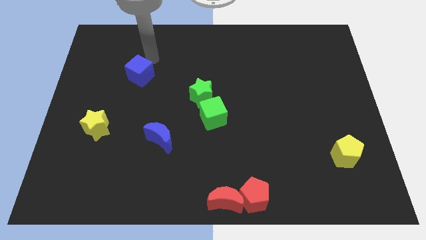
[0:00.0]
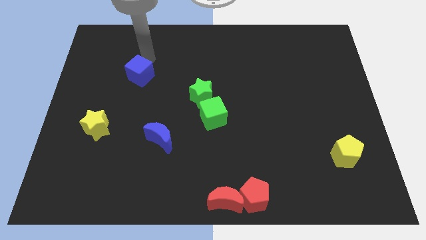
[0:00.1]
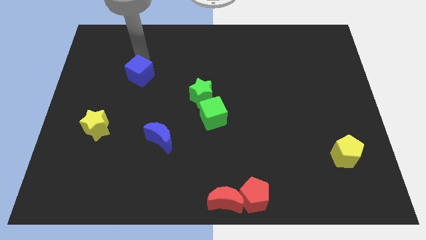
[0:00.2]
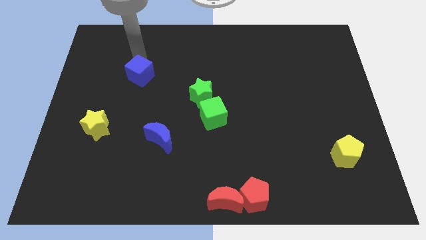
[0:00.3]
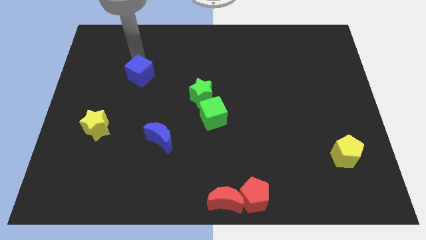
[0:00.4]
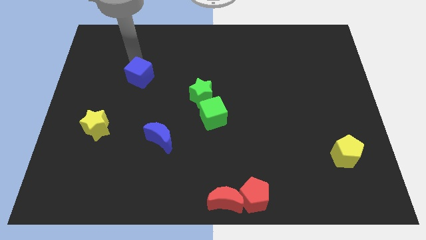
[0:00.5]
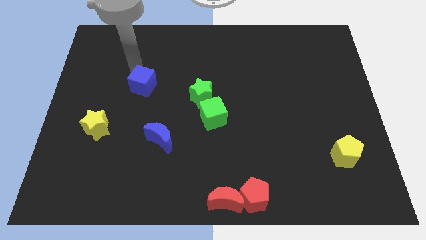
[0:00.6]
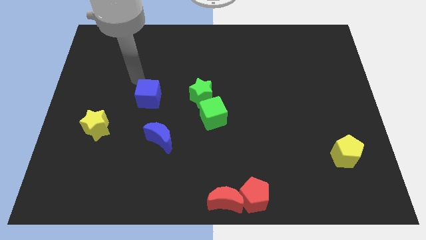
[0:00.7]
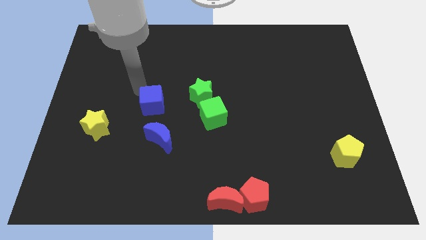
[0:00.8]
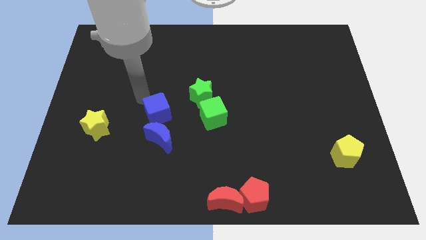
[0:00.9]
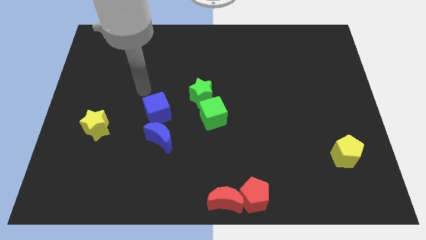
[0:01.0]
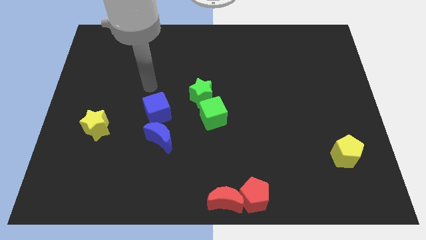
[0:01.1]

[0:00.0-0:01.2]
push the blue cube towards the left side of the green cube

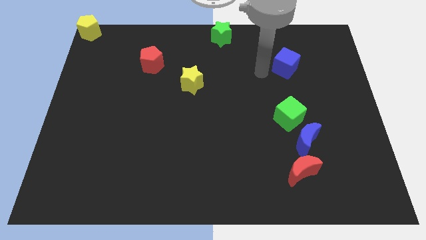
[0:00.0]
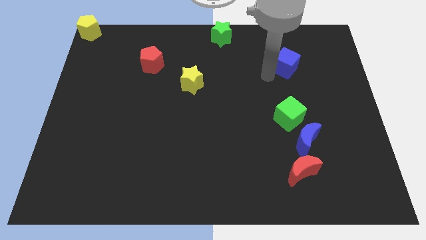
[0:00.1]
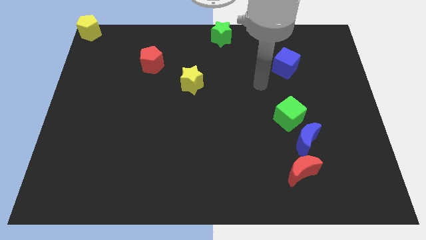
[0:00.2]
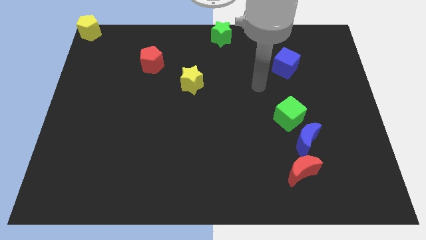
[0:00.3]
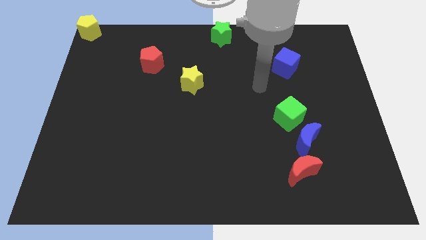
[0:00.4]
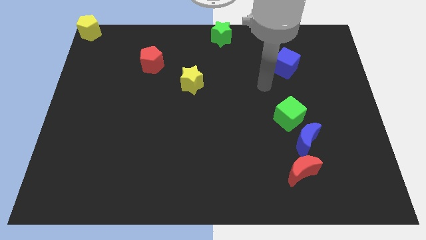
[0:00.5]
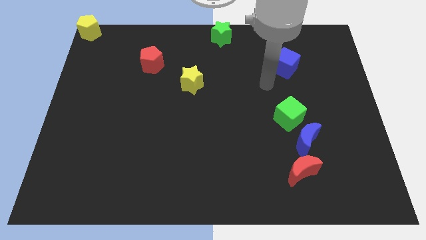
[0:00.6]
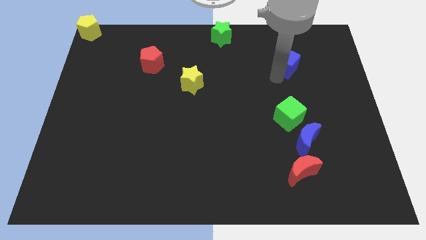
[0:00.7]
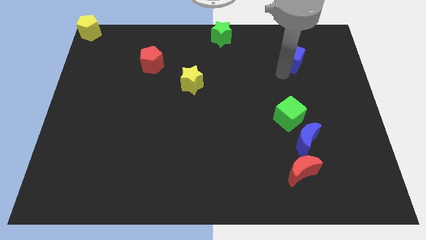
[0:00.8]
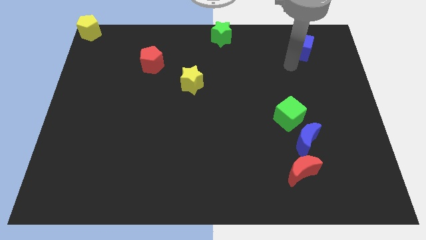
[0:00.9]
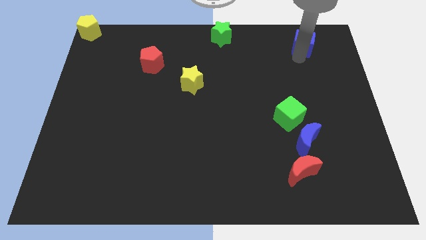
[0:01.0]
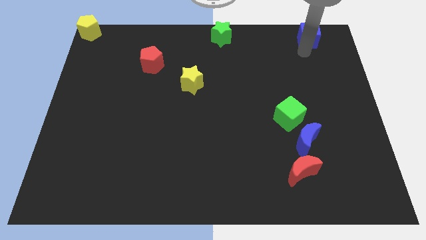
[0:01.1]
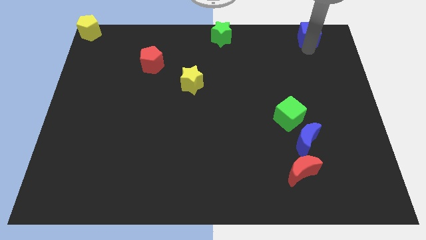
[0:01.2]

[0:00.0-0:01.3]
slide the blue cube diagonally top right to the green cube

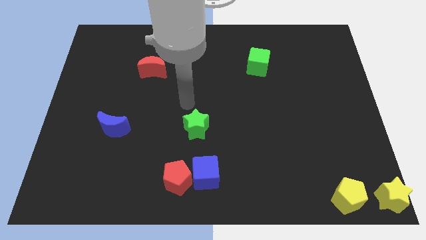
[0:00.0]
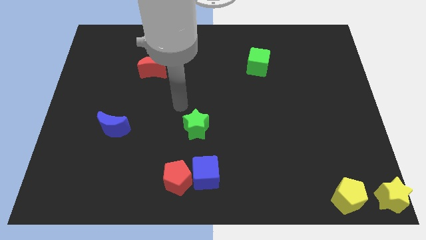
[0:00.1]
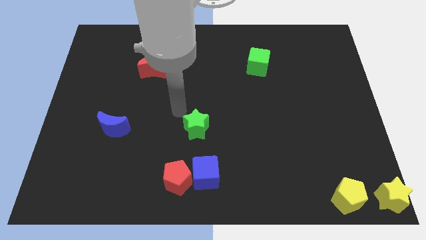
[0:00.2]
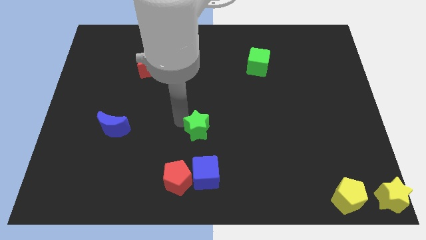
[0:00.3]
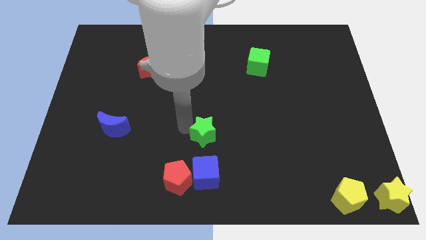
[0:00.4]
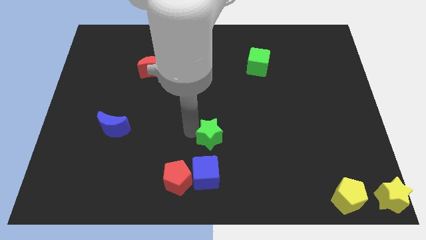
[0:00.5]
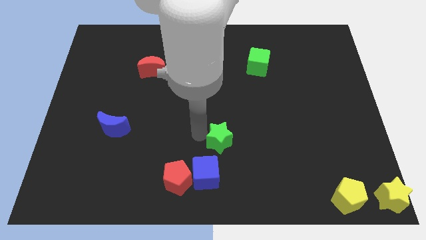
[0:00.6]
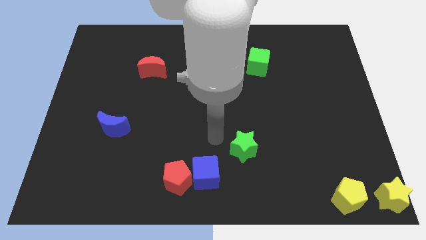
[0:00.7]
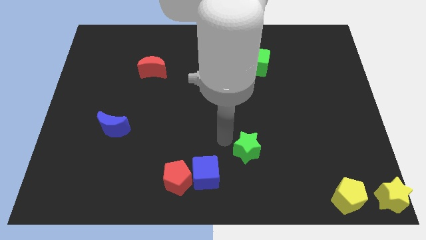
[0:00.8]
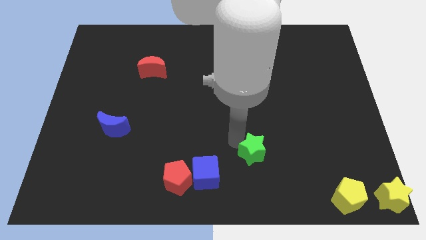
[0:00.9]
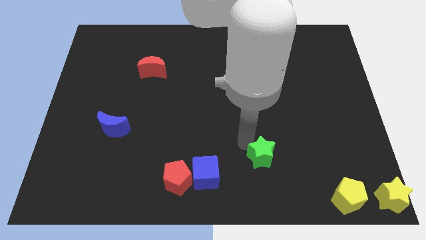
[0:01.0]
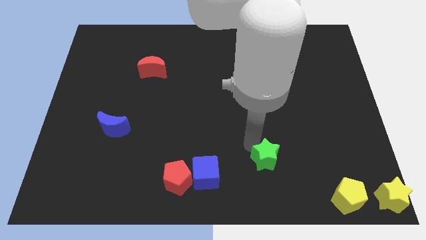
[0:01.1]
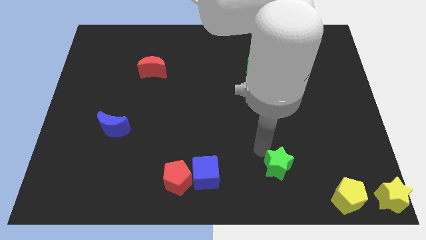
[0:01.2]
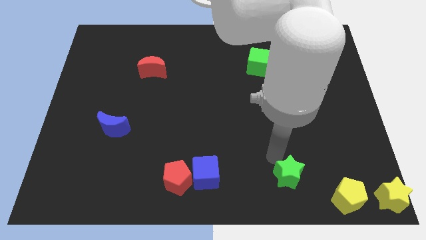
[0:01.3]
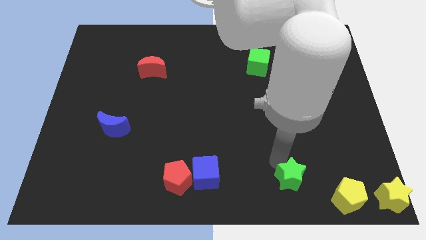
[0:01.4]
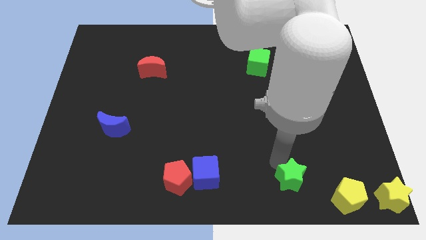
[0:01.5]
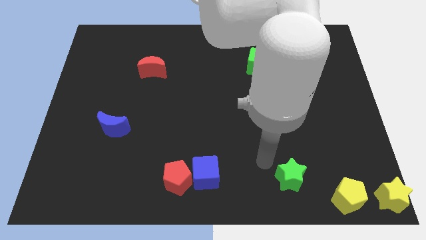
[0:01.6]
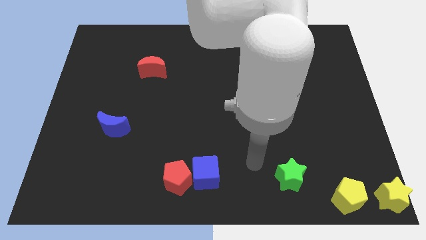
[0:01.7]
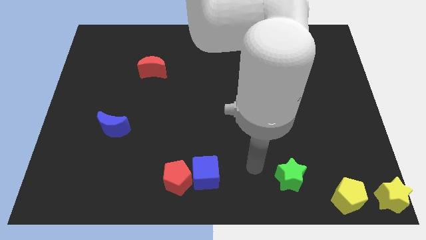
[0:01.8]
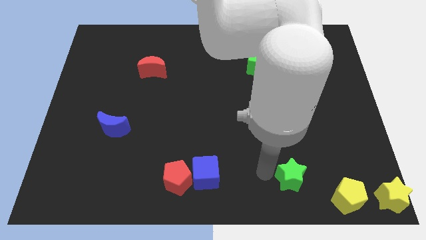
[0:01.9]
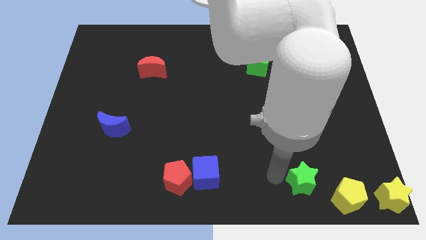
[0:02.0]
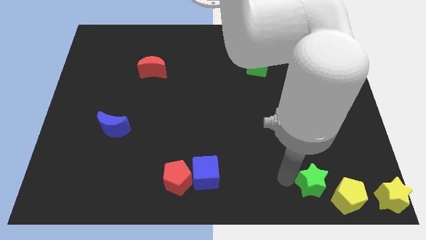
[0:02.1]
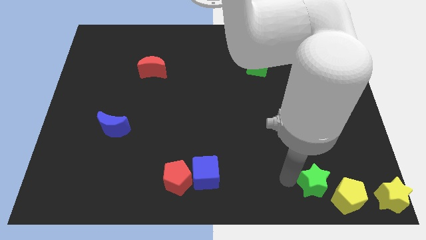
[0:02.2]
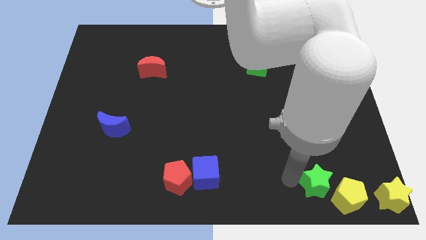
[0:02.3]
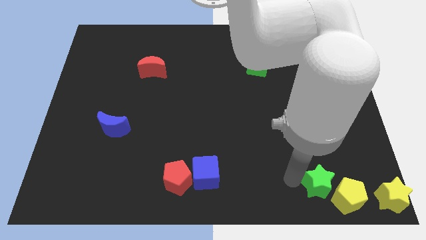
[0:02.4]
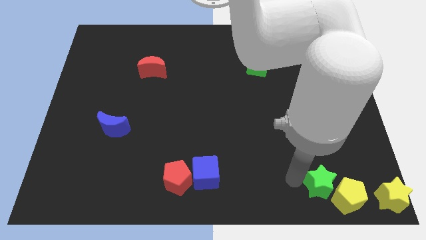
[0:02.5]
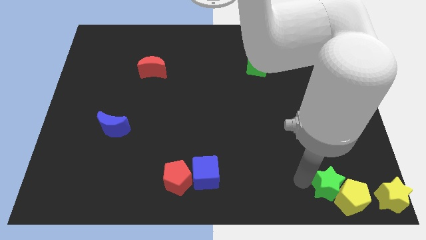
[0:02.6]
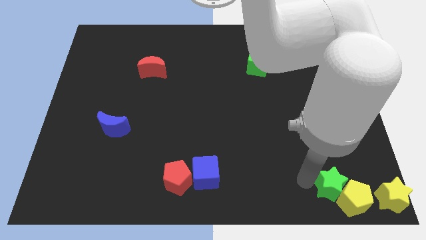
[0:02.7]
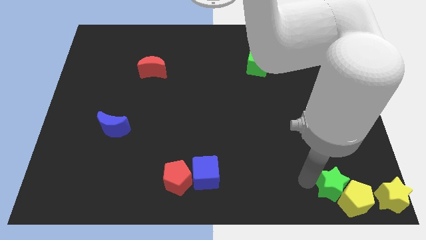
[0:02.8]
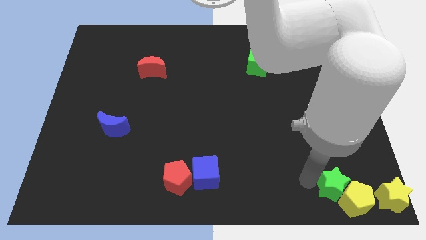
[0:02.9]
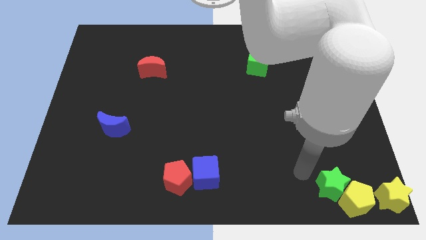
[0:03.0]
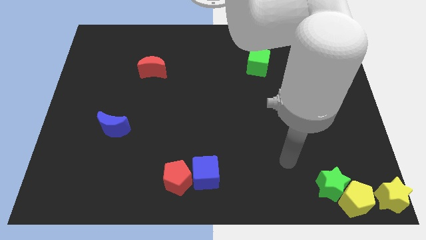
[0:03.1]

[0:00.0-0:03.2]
push the green star into the yellow pentagon

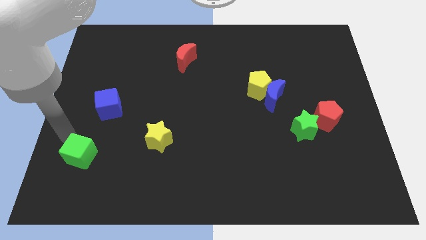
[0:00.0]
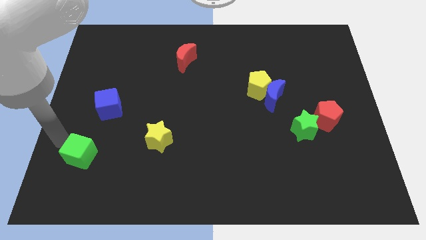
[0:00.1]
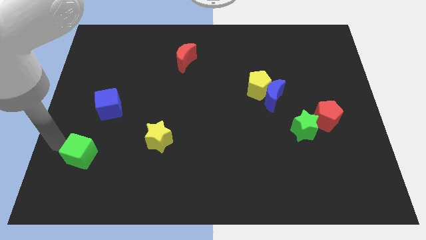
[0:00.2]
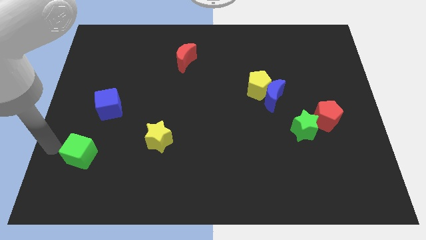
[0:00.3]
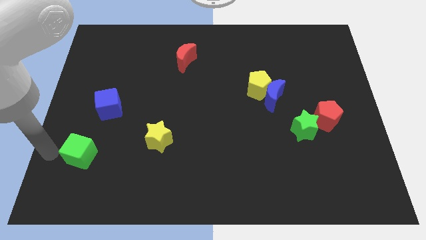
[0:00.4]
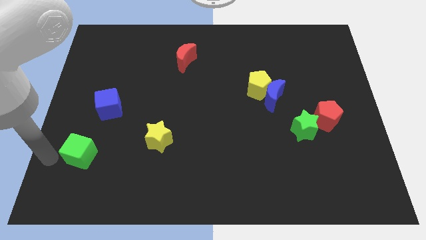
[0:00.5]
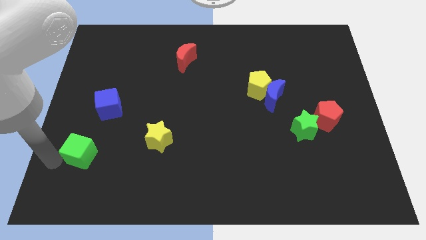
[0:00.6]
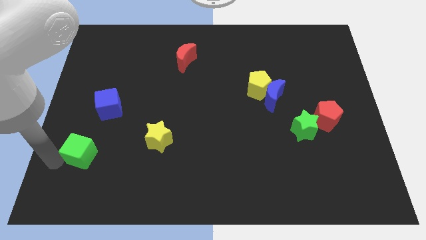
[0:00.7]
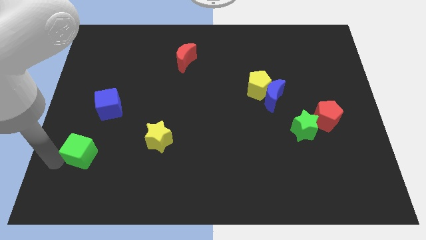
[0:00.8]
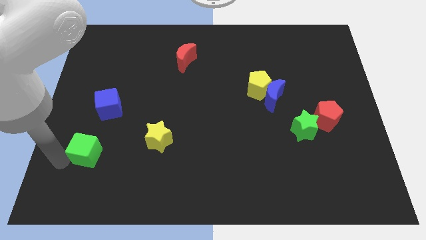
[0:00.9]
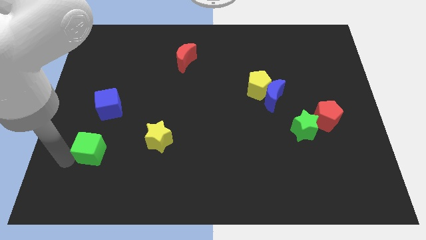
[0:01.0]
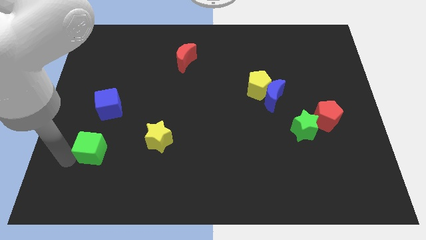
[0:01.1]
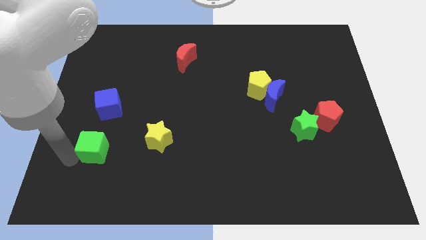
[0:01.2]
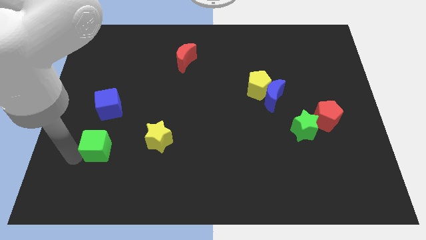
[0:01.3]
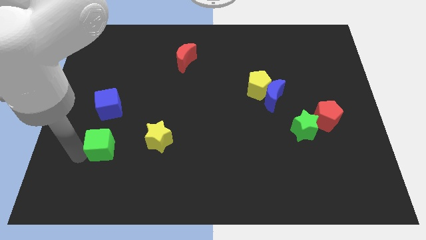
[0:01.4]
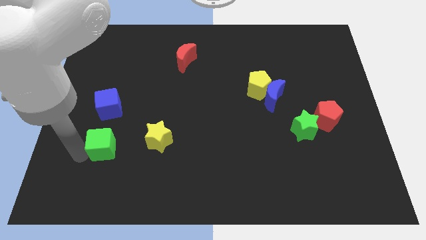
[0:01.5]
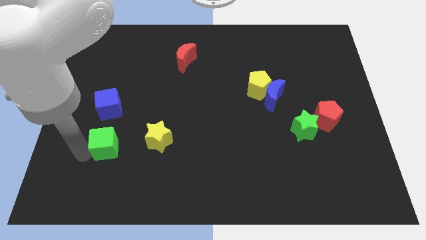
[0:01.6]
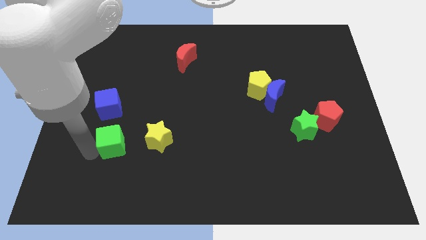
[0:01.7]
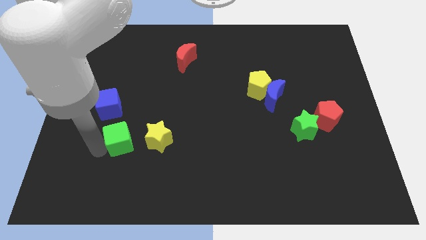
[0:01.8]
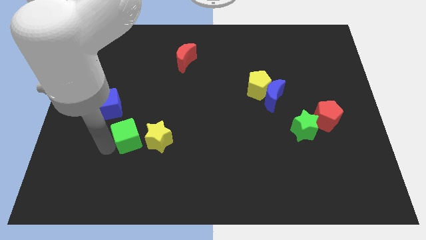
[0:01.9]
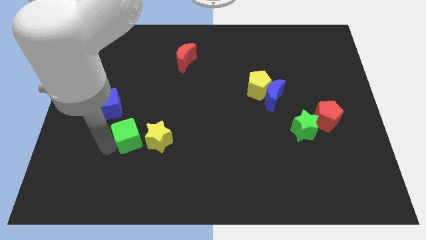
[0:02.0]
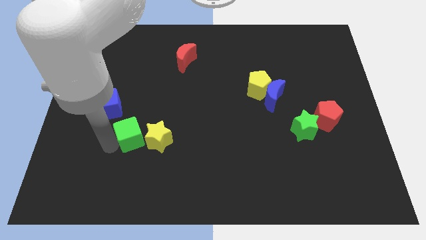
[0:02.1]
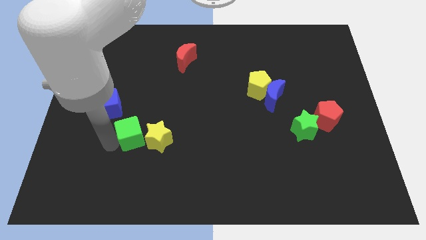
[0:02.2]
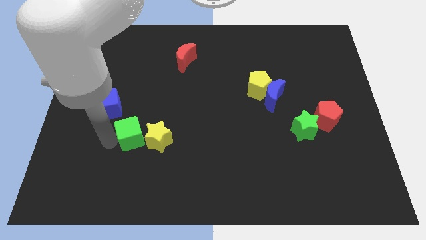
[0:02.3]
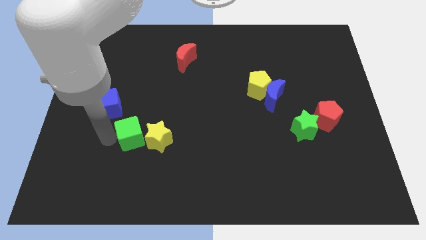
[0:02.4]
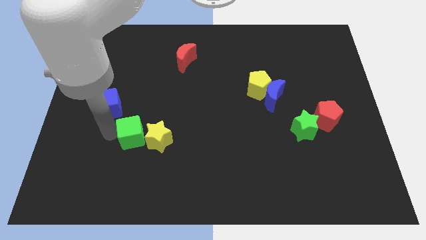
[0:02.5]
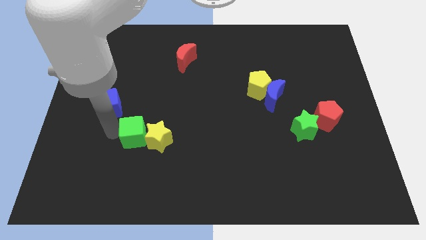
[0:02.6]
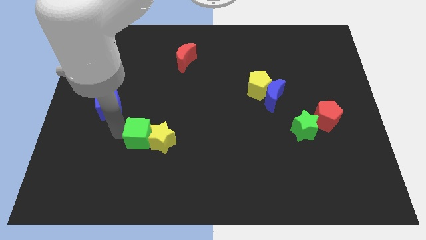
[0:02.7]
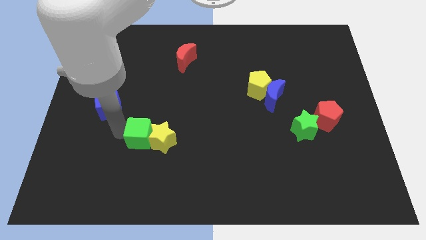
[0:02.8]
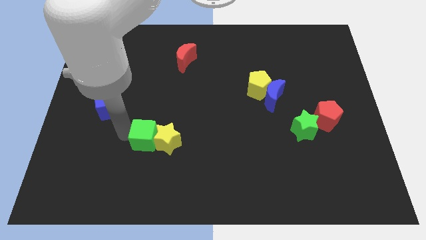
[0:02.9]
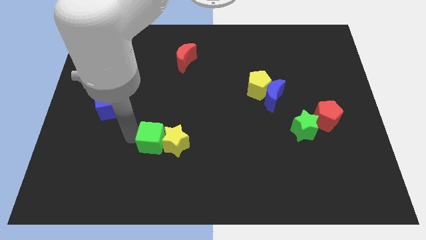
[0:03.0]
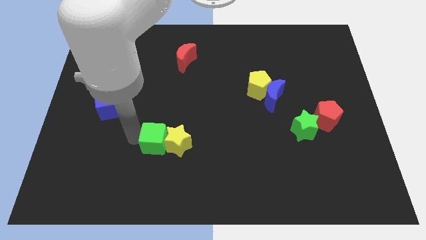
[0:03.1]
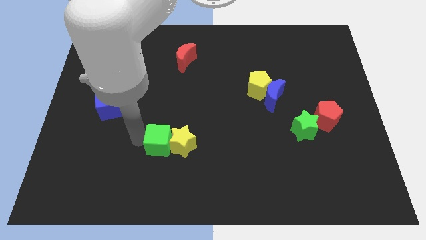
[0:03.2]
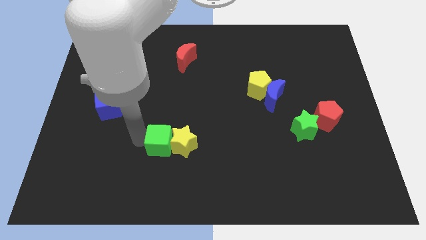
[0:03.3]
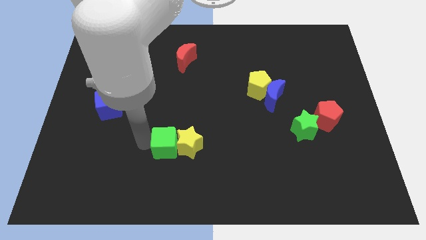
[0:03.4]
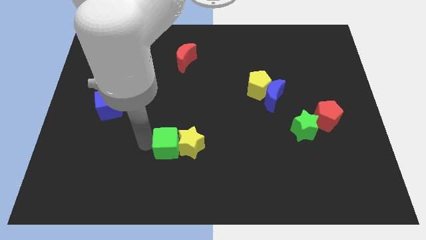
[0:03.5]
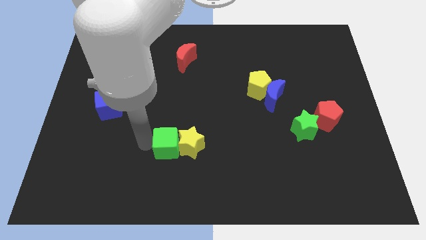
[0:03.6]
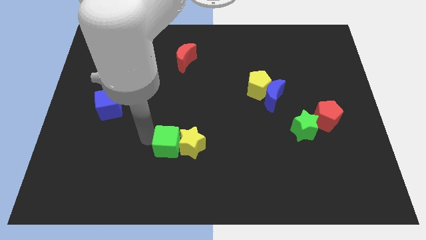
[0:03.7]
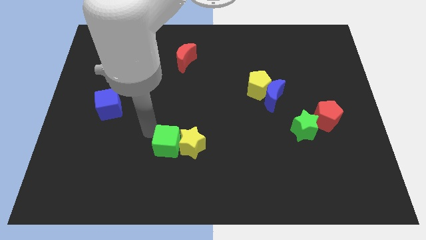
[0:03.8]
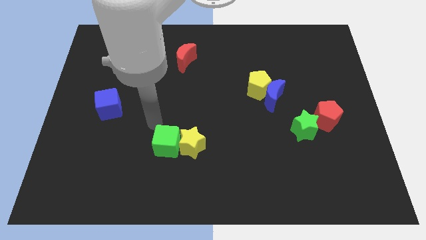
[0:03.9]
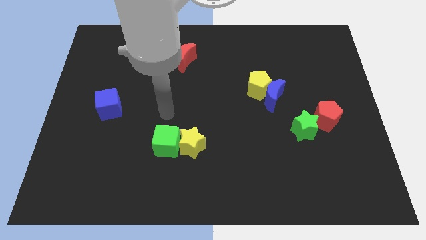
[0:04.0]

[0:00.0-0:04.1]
move green cube to the left of yellow star
